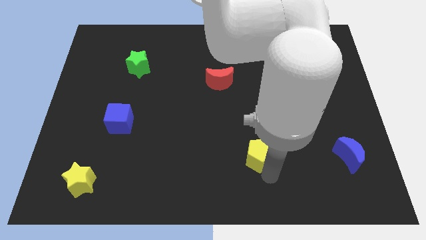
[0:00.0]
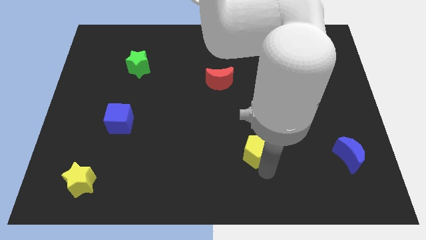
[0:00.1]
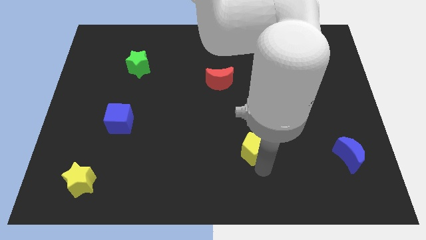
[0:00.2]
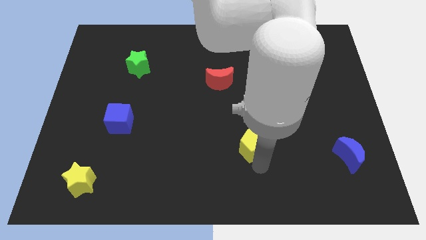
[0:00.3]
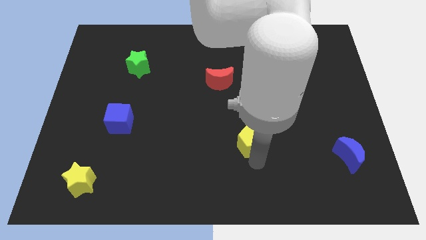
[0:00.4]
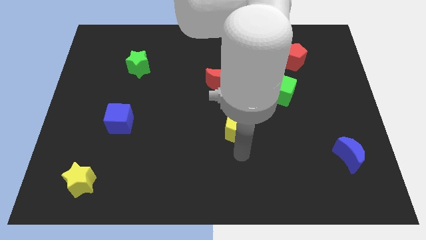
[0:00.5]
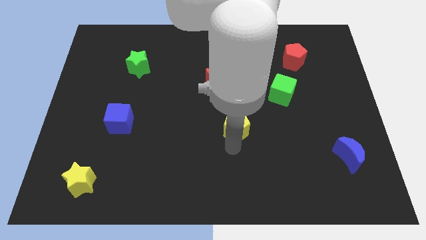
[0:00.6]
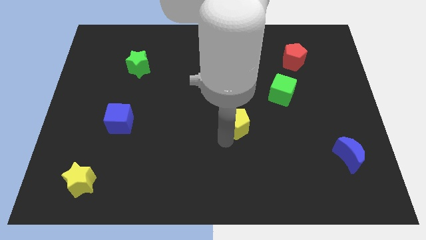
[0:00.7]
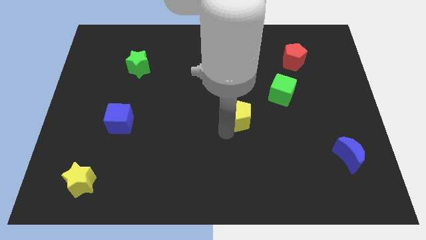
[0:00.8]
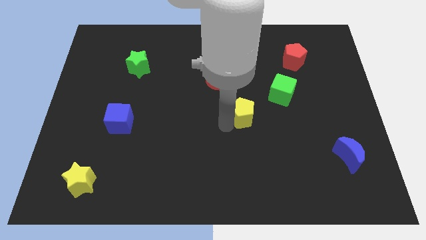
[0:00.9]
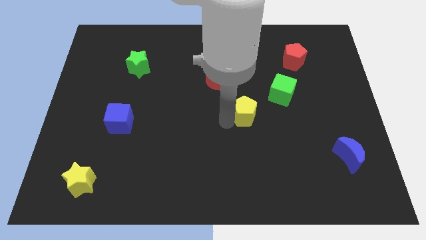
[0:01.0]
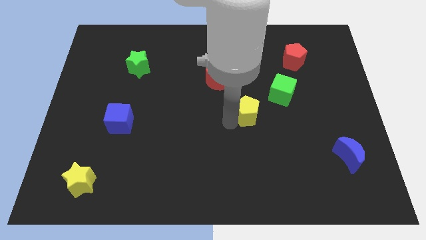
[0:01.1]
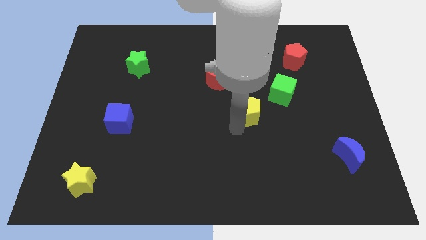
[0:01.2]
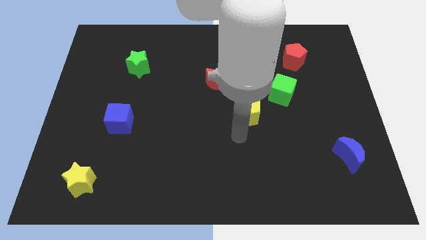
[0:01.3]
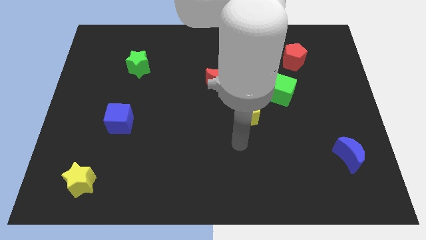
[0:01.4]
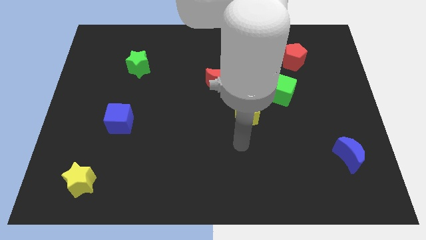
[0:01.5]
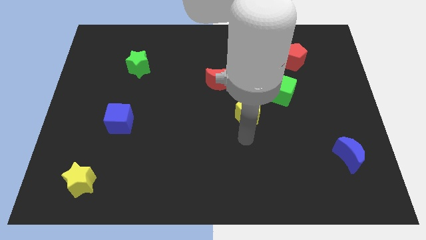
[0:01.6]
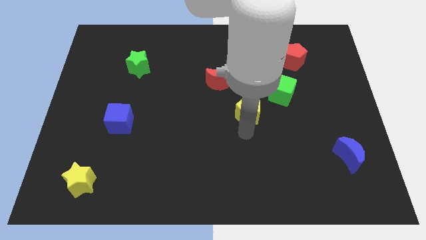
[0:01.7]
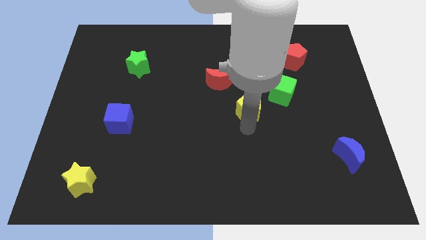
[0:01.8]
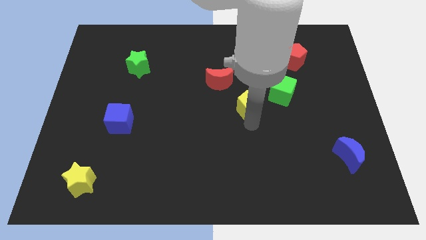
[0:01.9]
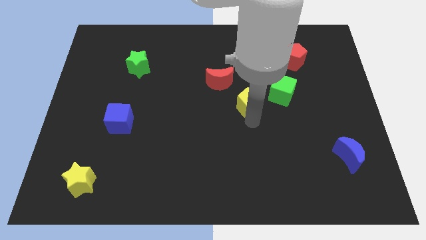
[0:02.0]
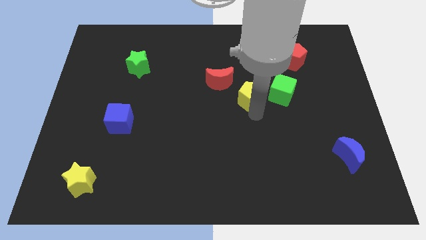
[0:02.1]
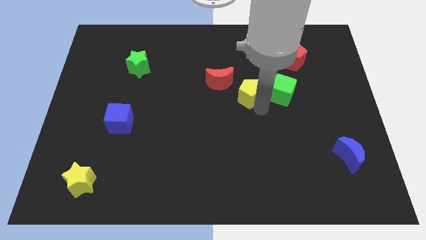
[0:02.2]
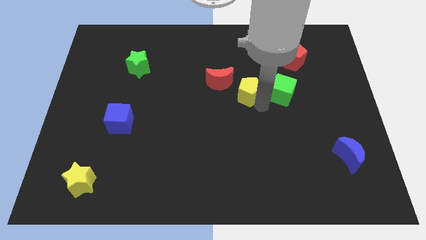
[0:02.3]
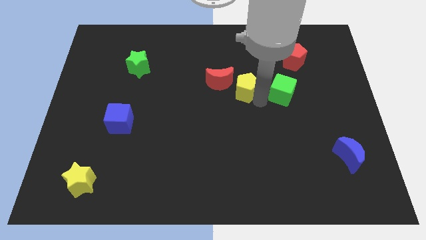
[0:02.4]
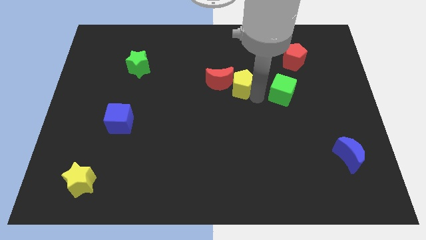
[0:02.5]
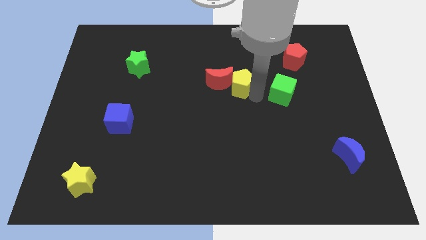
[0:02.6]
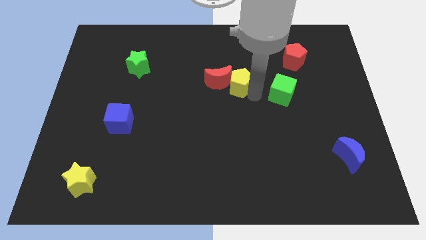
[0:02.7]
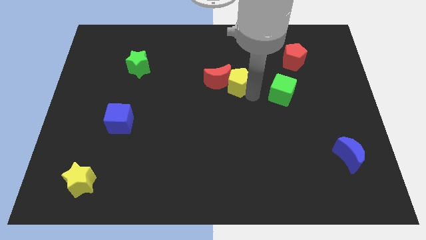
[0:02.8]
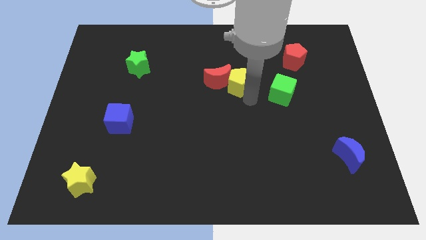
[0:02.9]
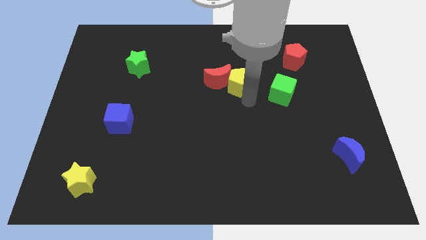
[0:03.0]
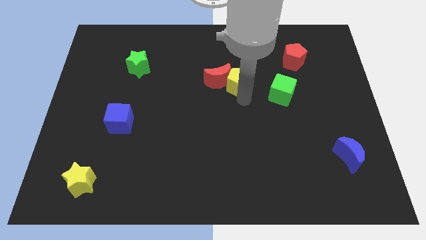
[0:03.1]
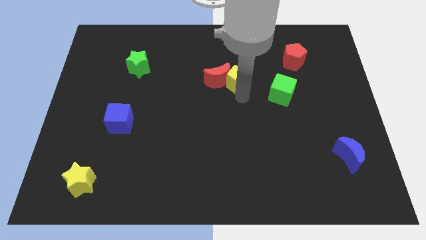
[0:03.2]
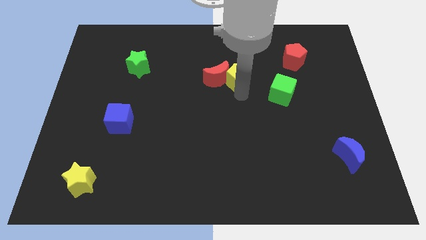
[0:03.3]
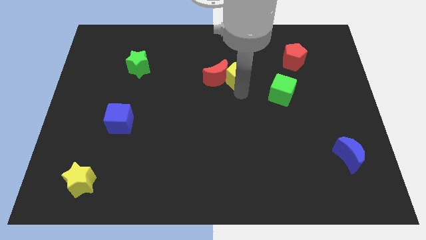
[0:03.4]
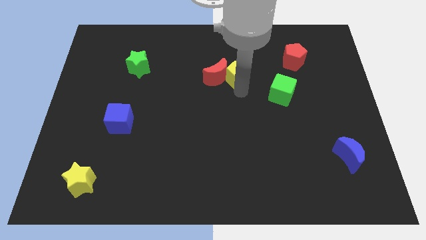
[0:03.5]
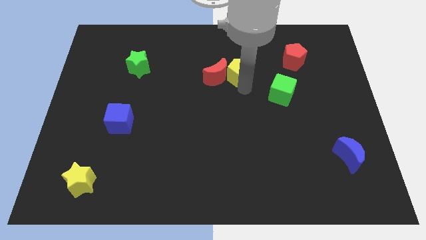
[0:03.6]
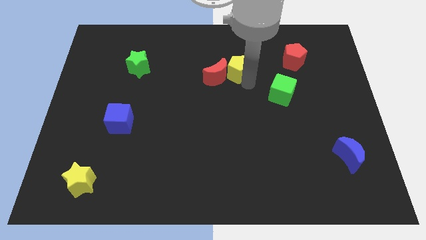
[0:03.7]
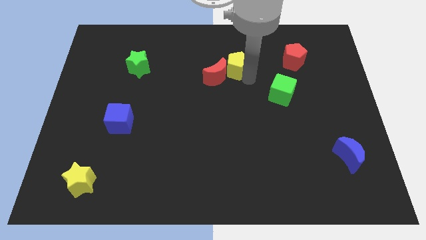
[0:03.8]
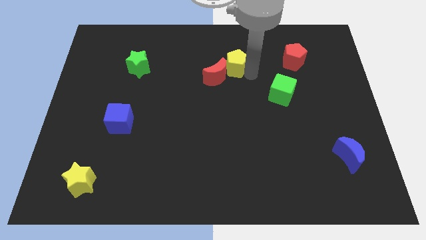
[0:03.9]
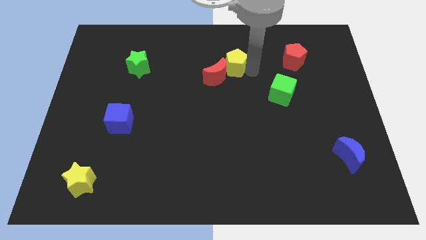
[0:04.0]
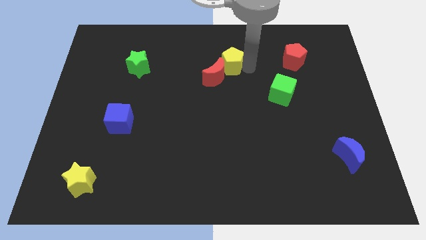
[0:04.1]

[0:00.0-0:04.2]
push the yellow pentagon into the red moon

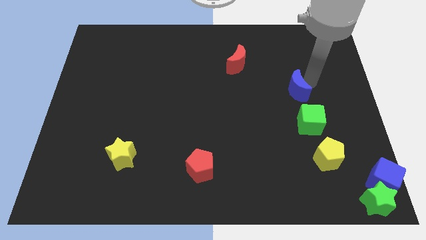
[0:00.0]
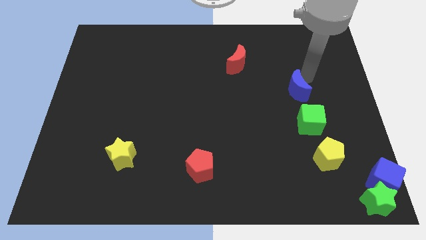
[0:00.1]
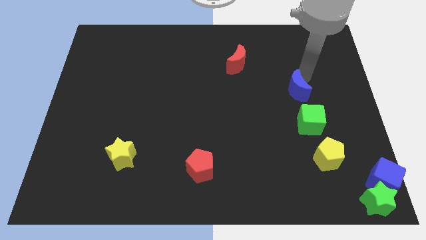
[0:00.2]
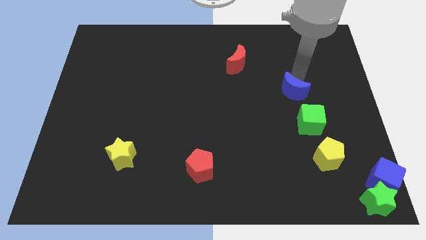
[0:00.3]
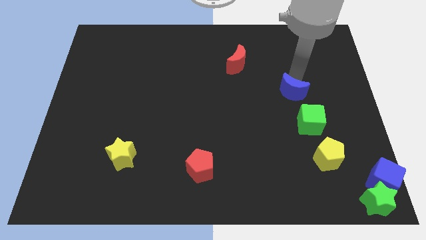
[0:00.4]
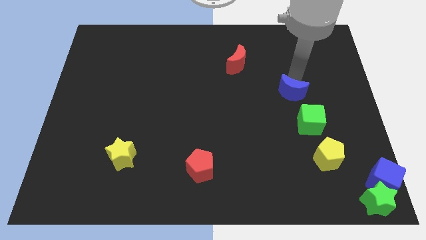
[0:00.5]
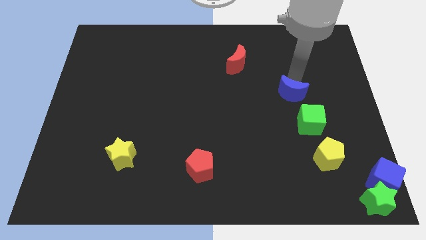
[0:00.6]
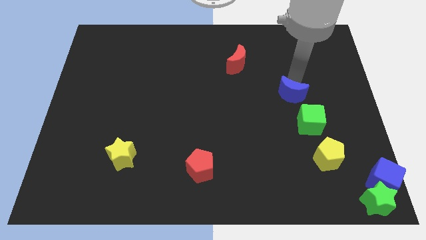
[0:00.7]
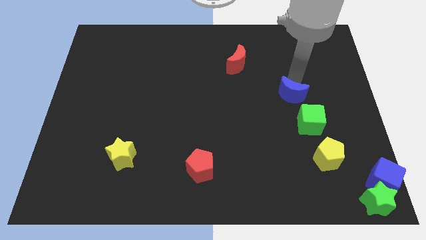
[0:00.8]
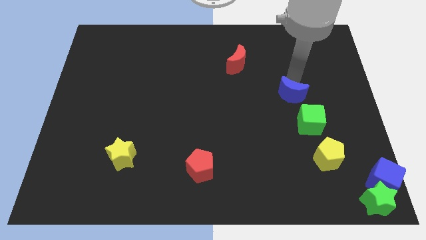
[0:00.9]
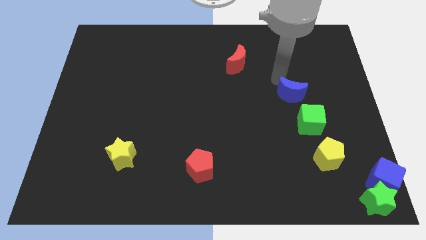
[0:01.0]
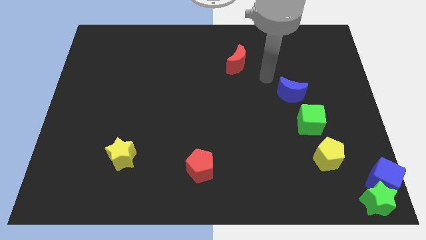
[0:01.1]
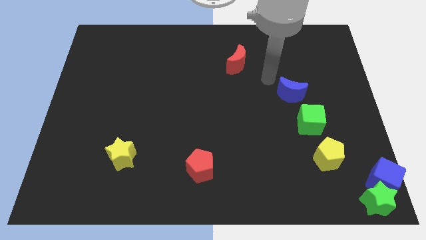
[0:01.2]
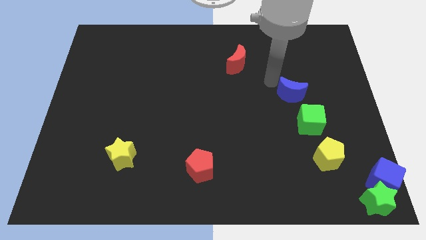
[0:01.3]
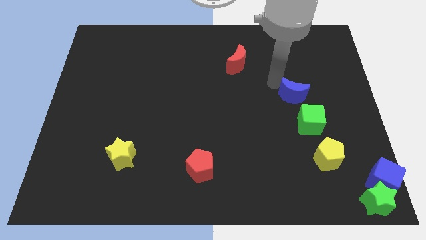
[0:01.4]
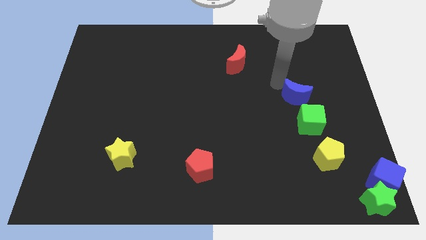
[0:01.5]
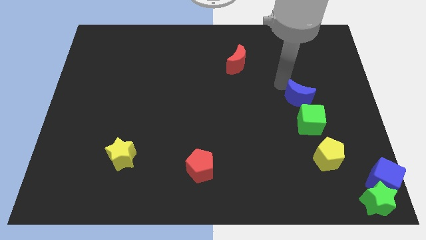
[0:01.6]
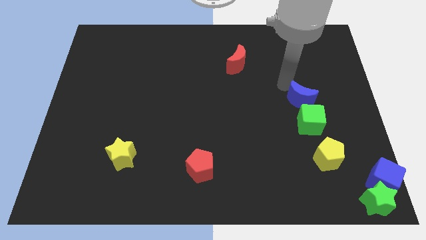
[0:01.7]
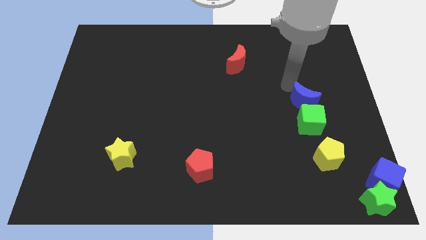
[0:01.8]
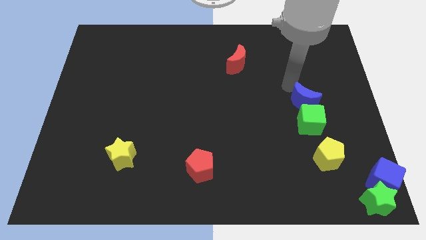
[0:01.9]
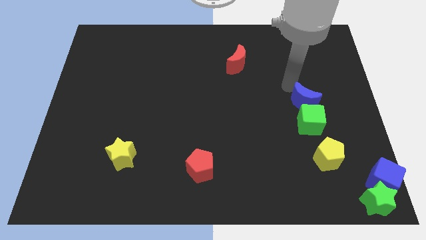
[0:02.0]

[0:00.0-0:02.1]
move the blue crescent above to the green cub

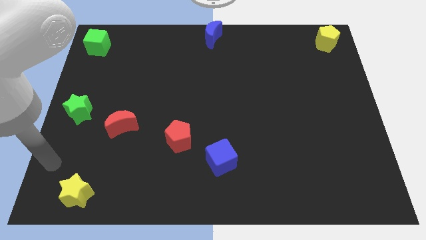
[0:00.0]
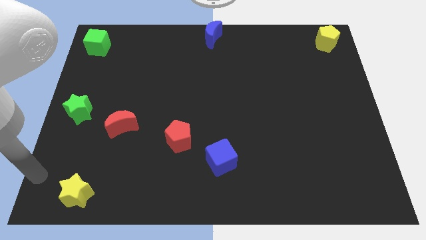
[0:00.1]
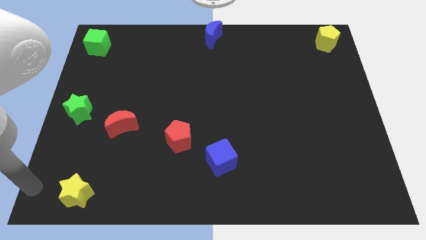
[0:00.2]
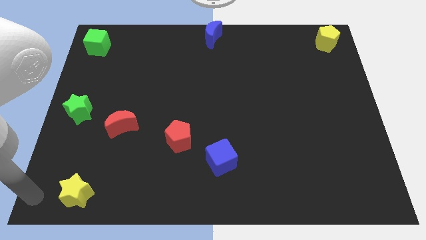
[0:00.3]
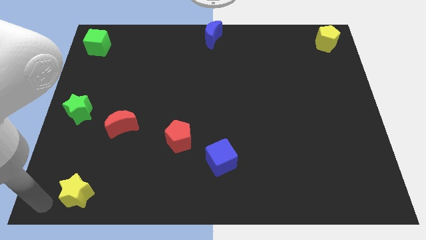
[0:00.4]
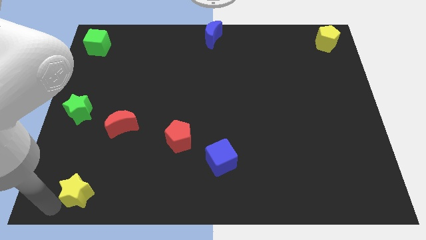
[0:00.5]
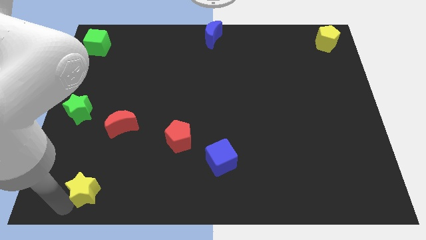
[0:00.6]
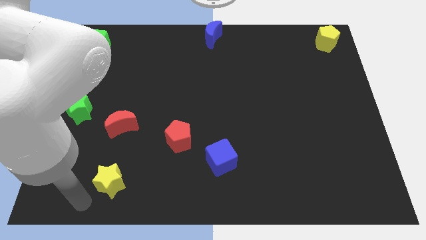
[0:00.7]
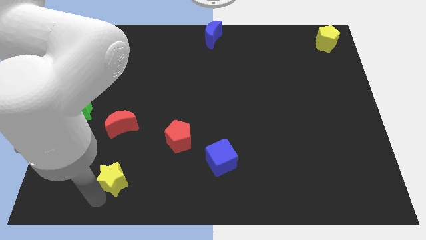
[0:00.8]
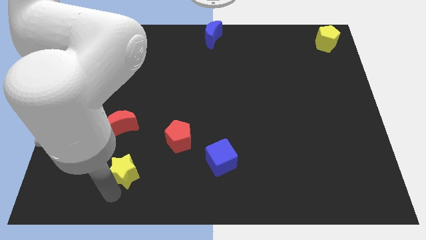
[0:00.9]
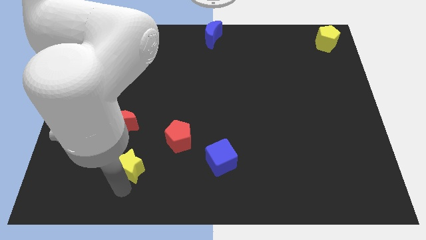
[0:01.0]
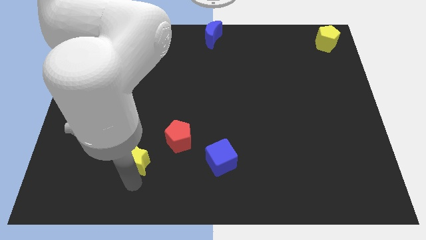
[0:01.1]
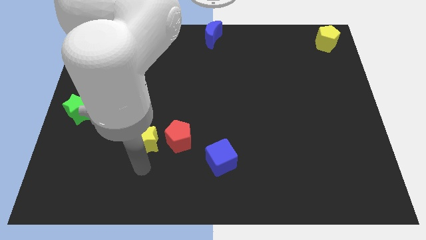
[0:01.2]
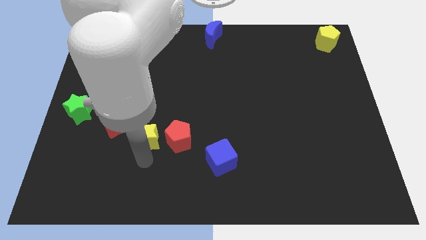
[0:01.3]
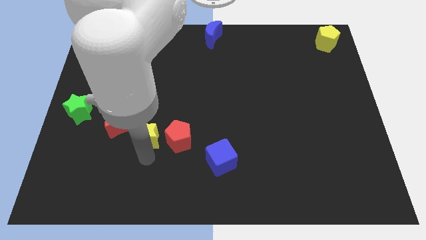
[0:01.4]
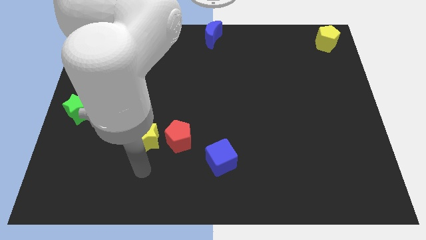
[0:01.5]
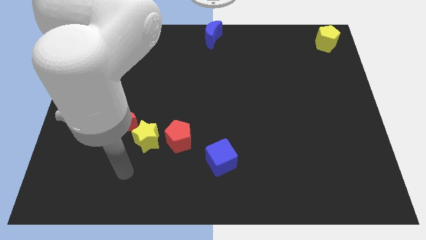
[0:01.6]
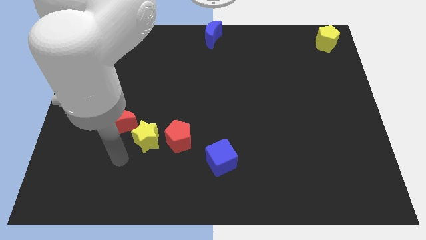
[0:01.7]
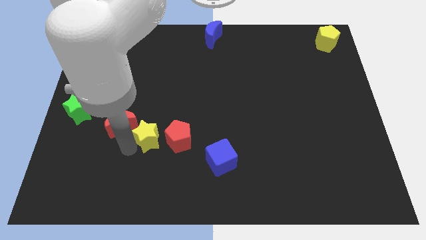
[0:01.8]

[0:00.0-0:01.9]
place yellow star in between two red blocks

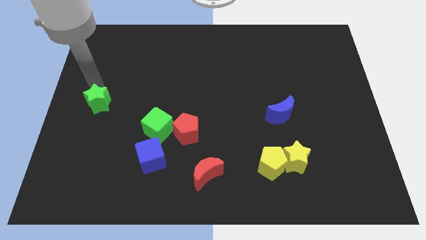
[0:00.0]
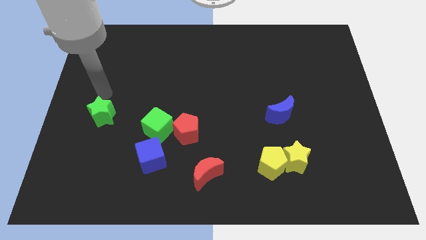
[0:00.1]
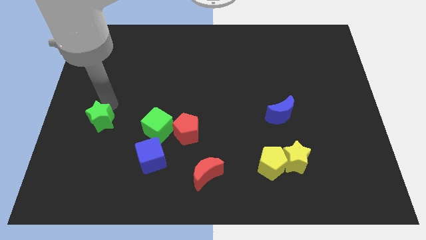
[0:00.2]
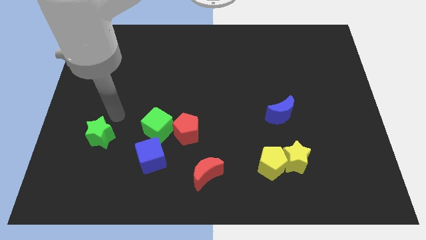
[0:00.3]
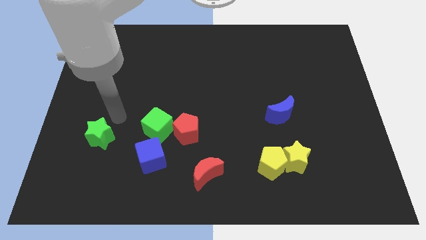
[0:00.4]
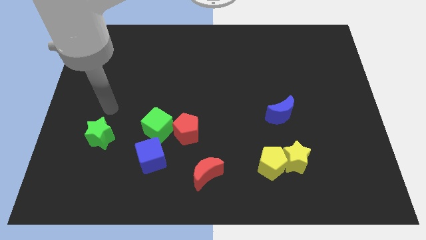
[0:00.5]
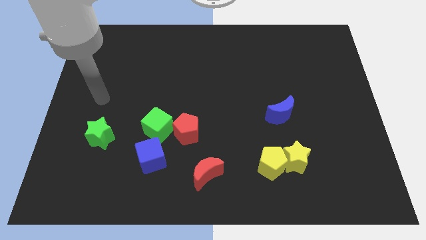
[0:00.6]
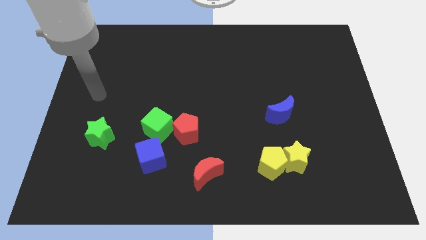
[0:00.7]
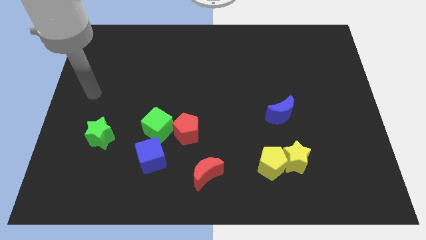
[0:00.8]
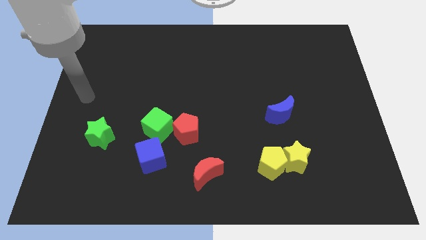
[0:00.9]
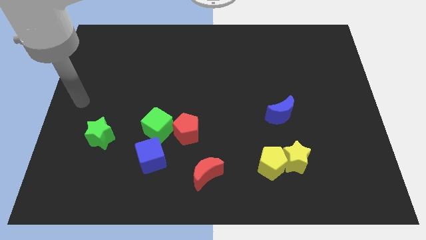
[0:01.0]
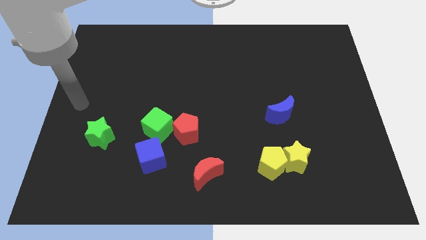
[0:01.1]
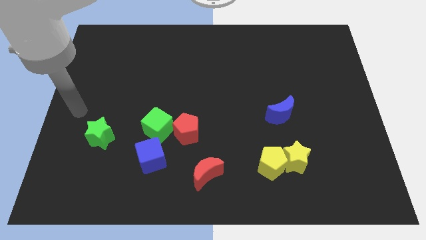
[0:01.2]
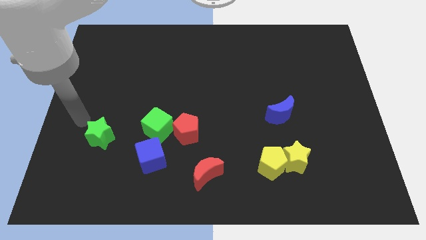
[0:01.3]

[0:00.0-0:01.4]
push the green star to the left of the green cube
